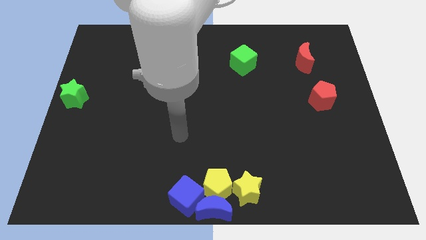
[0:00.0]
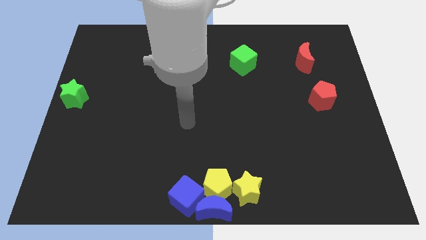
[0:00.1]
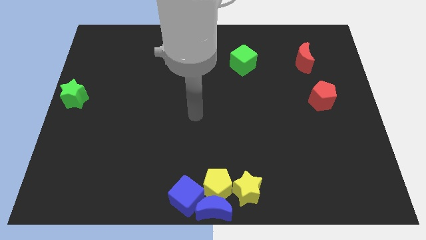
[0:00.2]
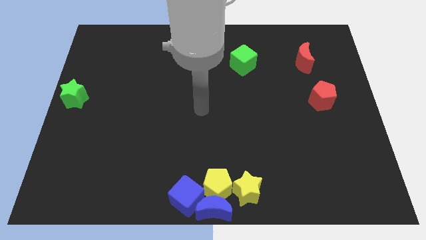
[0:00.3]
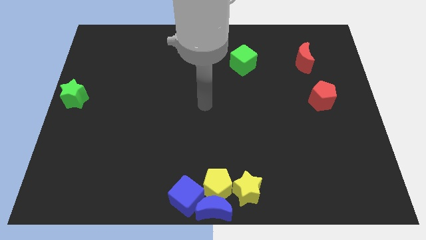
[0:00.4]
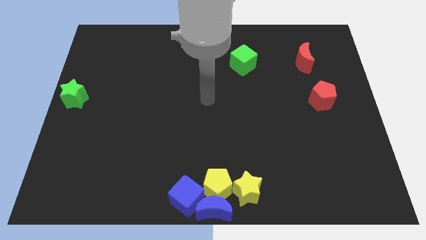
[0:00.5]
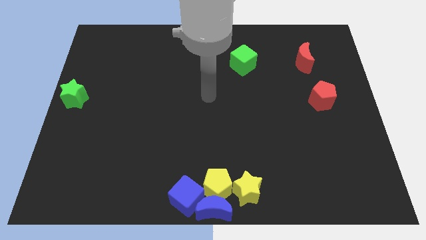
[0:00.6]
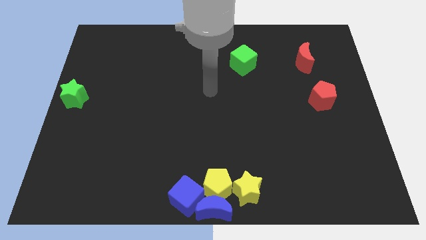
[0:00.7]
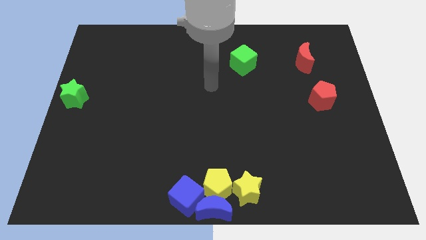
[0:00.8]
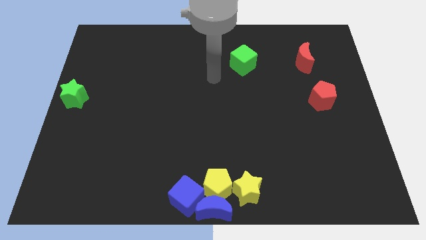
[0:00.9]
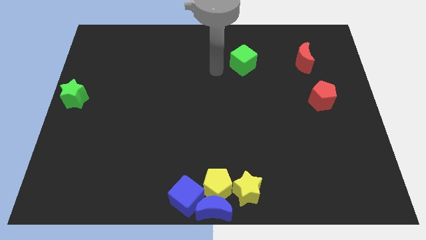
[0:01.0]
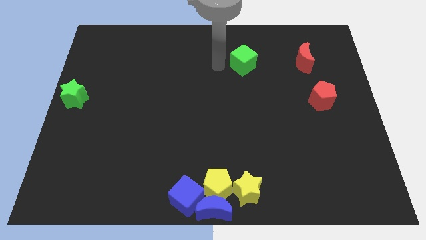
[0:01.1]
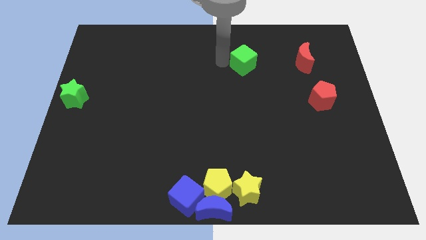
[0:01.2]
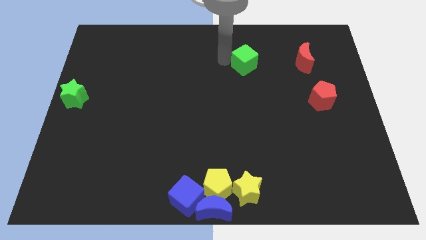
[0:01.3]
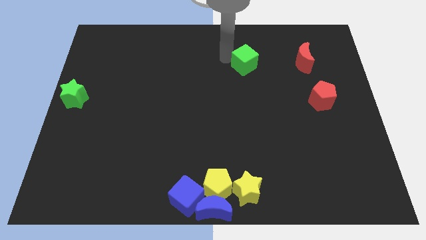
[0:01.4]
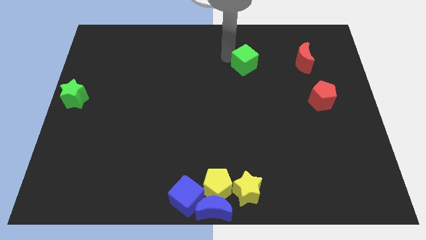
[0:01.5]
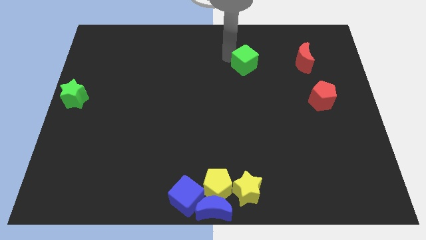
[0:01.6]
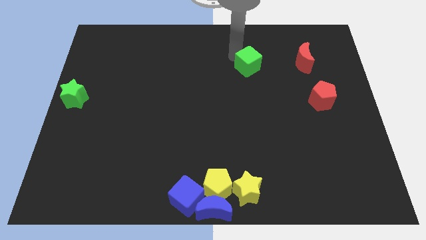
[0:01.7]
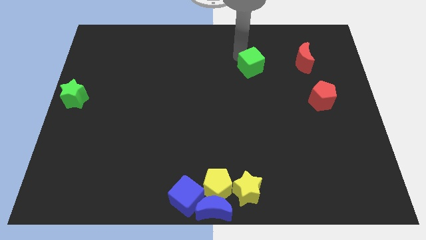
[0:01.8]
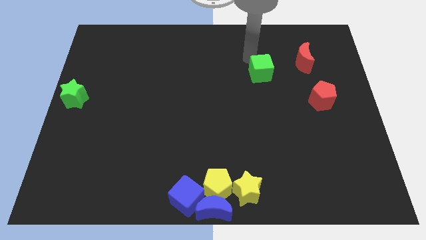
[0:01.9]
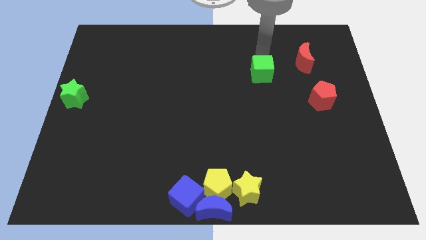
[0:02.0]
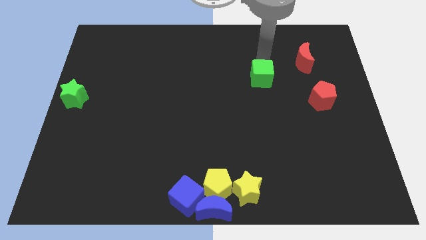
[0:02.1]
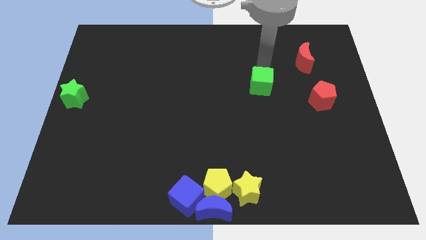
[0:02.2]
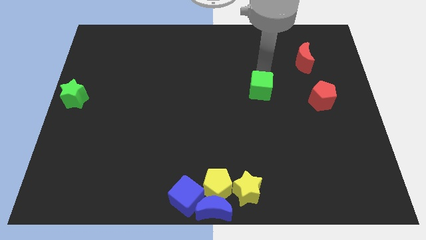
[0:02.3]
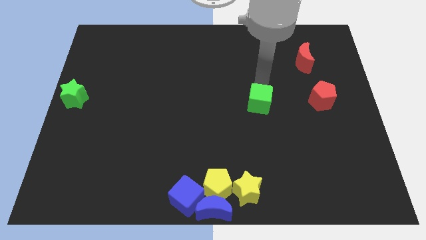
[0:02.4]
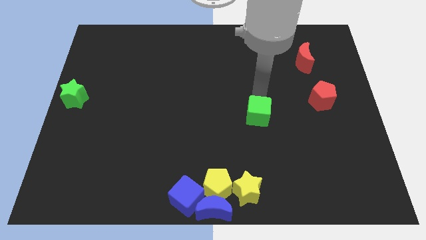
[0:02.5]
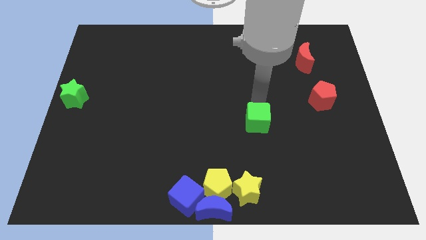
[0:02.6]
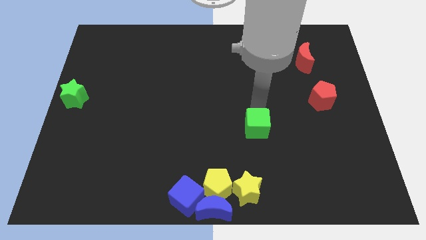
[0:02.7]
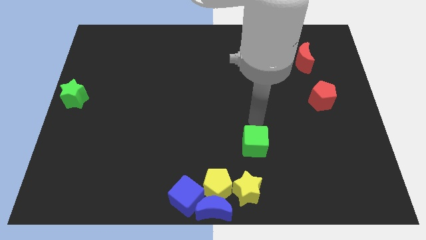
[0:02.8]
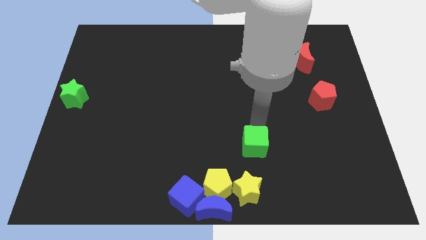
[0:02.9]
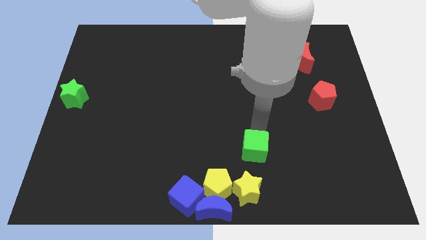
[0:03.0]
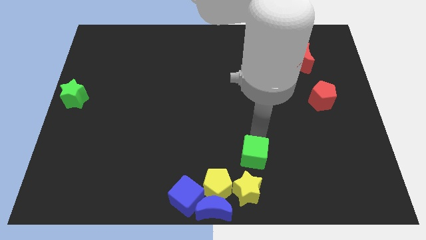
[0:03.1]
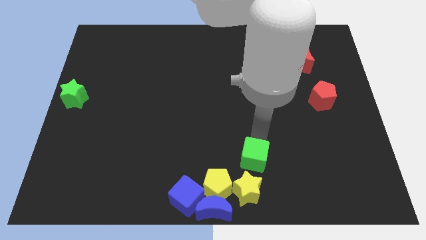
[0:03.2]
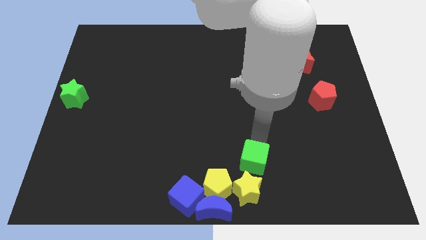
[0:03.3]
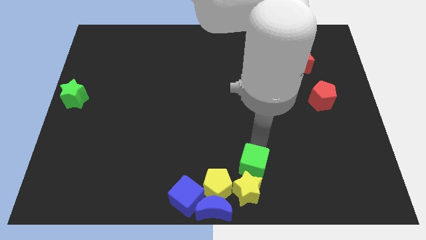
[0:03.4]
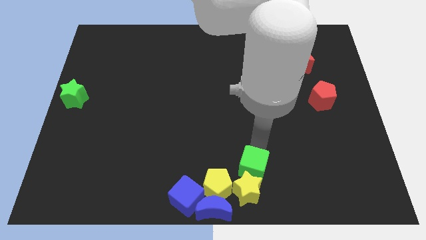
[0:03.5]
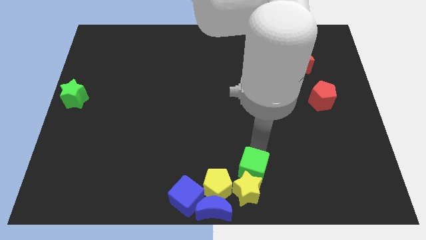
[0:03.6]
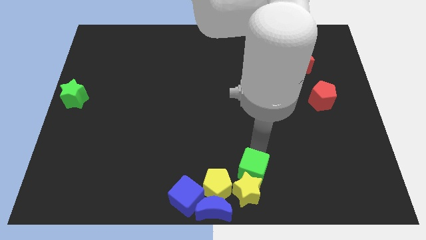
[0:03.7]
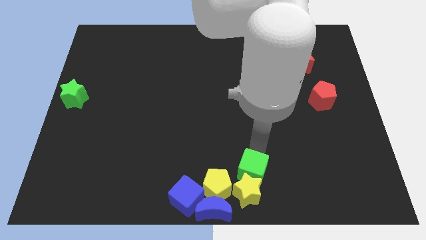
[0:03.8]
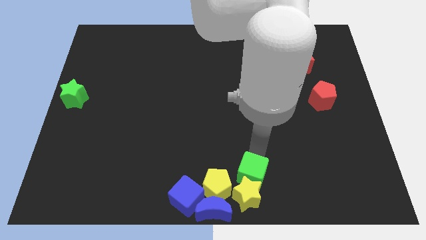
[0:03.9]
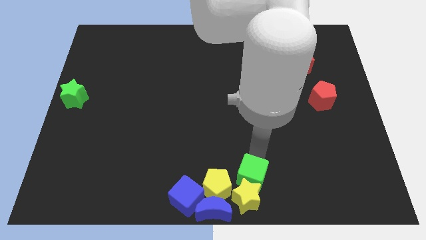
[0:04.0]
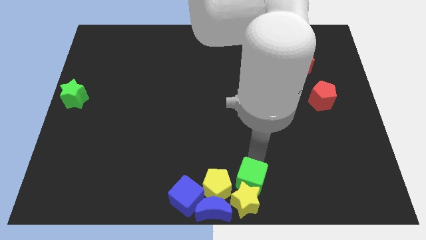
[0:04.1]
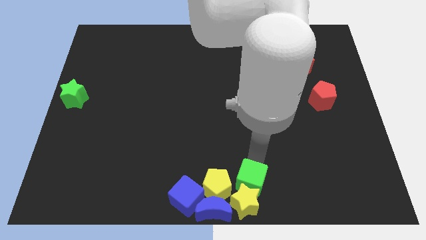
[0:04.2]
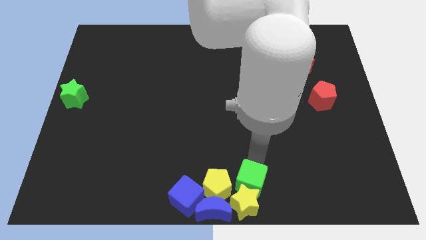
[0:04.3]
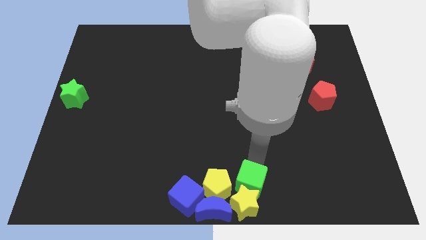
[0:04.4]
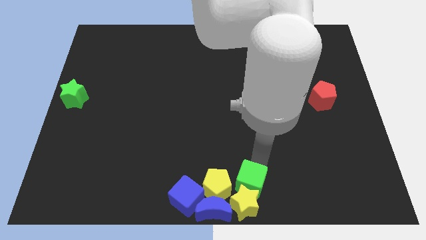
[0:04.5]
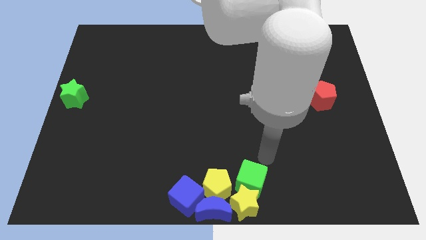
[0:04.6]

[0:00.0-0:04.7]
push the green cube into the yellow star

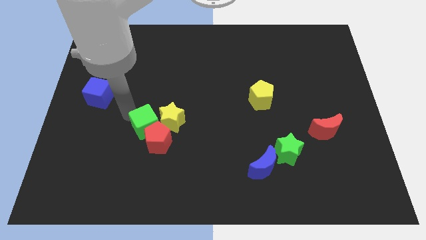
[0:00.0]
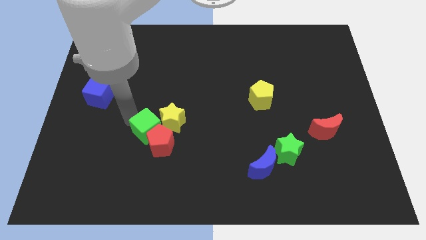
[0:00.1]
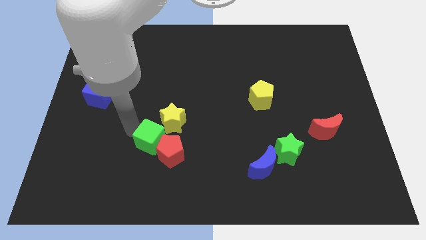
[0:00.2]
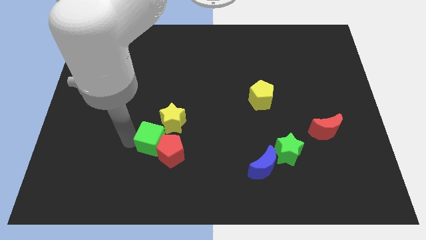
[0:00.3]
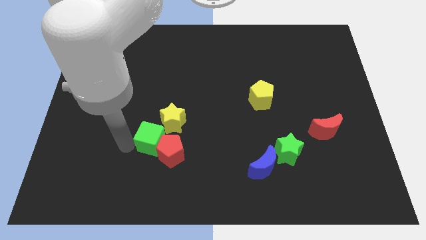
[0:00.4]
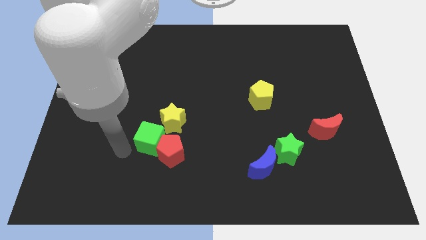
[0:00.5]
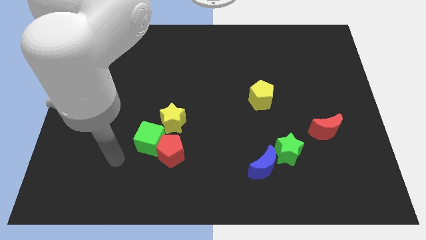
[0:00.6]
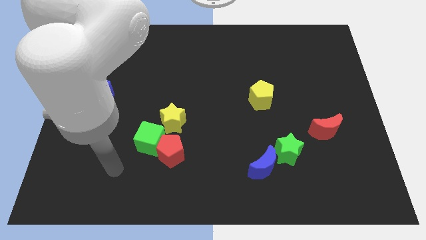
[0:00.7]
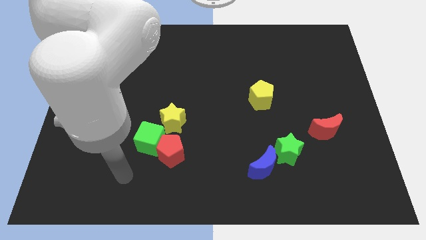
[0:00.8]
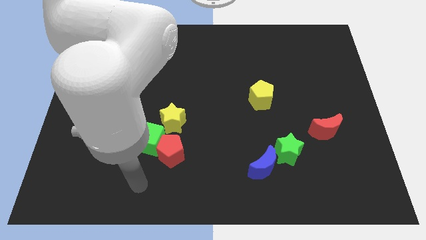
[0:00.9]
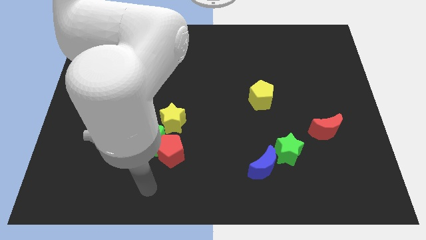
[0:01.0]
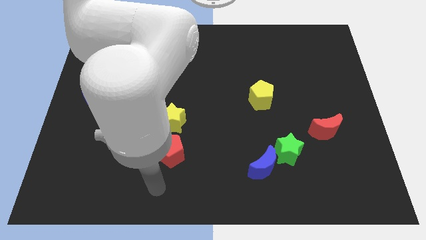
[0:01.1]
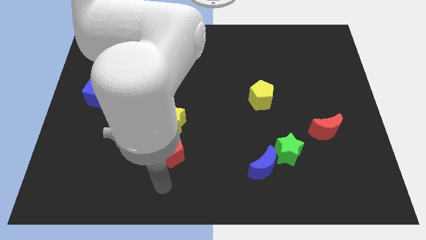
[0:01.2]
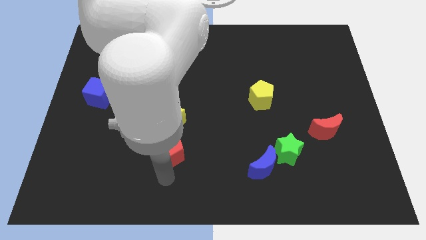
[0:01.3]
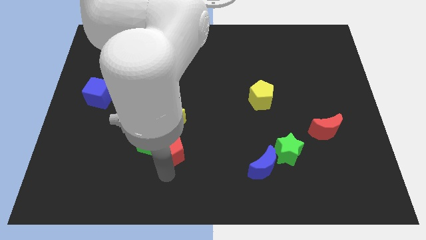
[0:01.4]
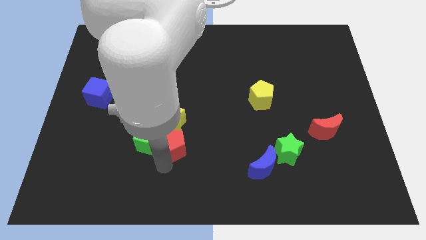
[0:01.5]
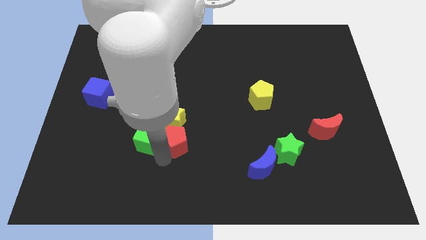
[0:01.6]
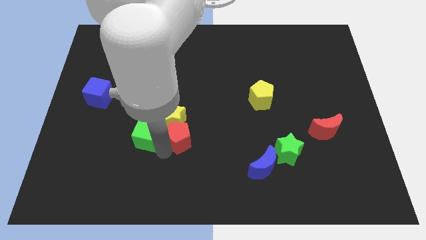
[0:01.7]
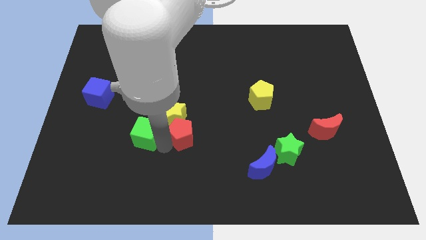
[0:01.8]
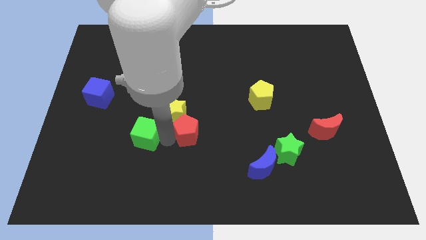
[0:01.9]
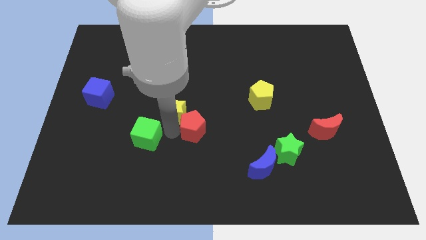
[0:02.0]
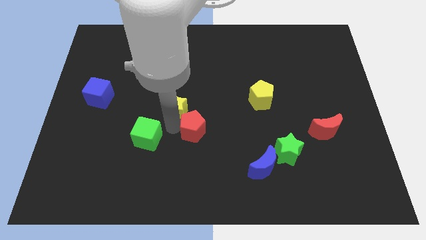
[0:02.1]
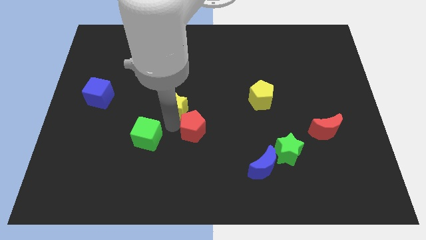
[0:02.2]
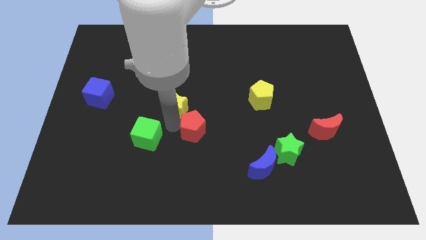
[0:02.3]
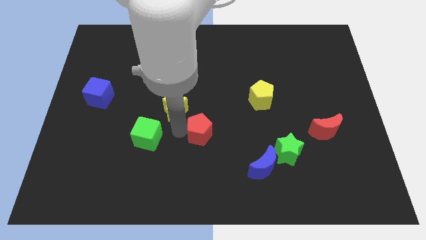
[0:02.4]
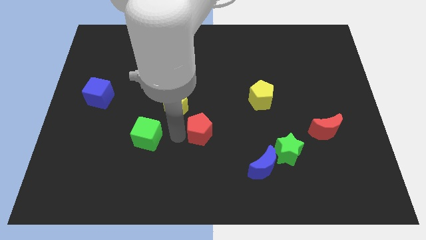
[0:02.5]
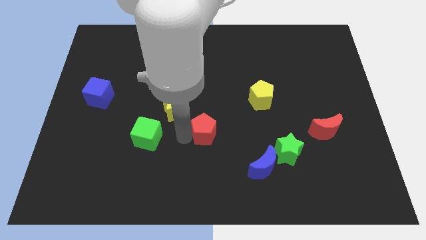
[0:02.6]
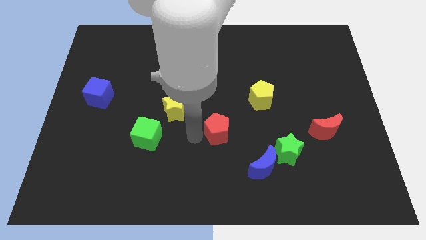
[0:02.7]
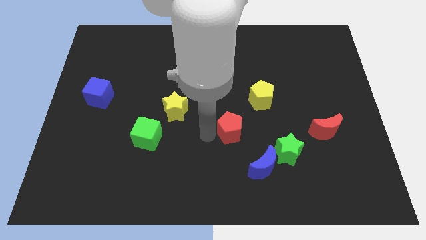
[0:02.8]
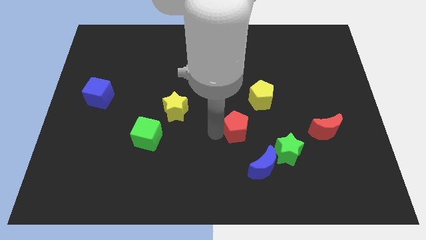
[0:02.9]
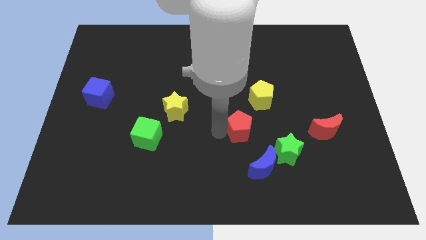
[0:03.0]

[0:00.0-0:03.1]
move the red pentagon slightly right

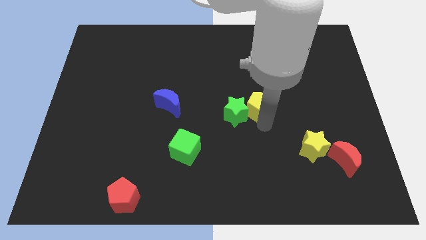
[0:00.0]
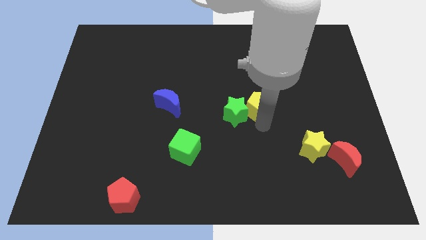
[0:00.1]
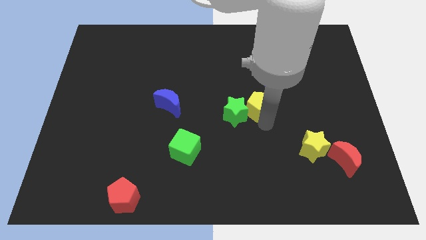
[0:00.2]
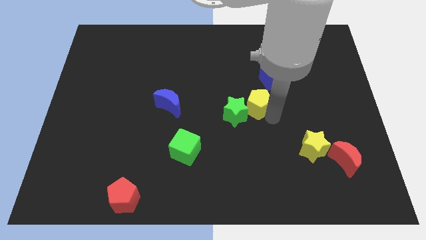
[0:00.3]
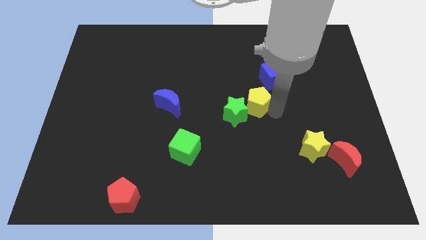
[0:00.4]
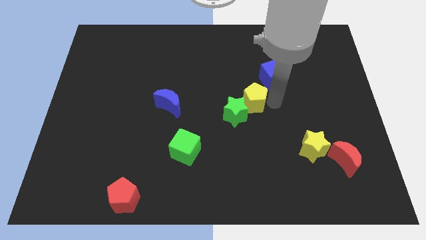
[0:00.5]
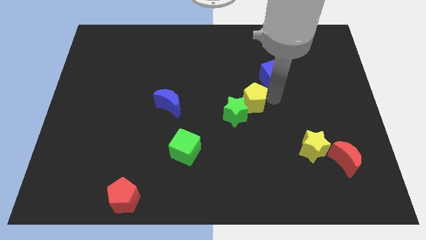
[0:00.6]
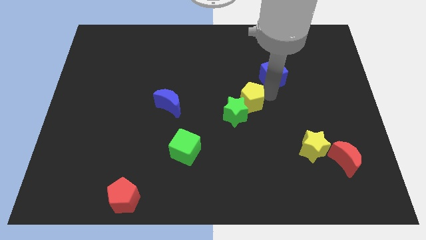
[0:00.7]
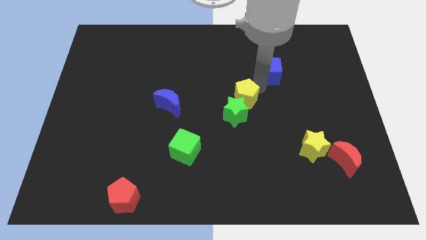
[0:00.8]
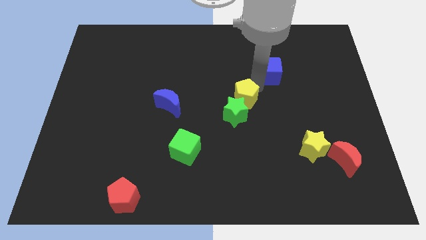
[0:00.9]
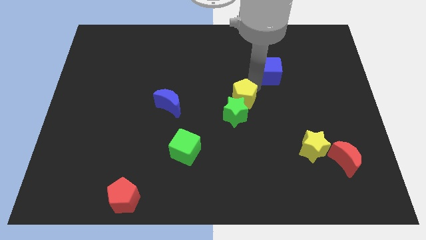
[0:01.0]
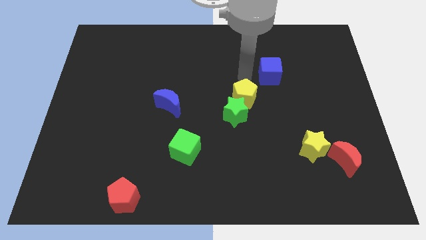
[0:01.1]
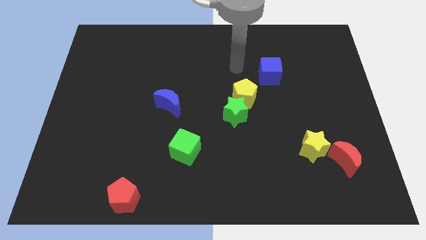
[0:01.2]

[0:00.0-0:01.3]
move the yellow pentagon above the green star
